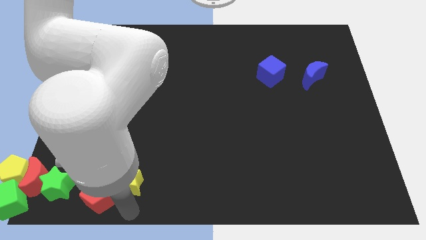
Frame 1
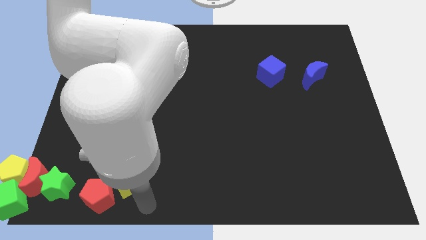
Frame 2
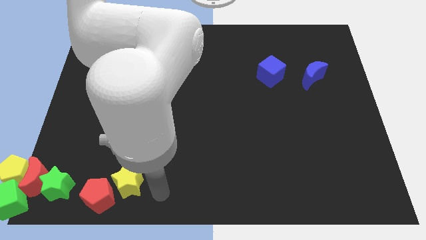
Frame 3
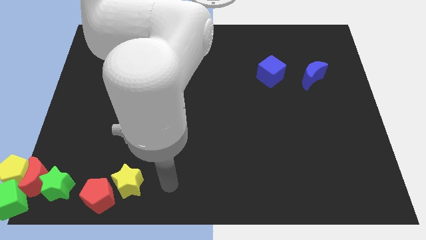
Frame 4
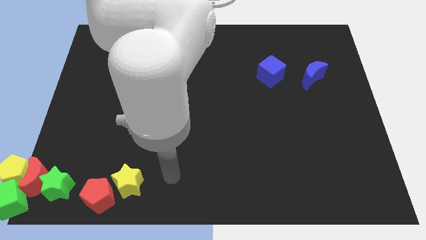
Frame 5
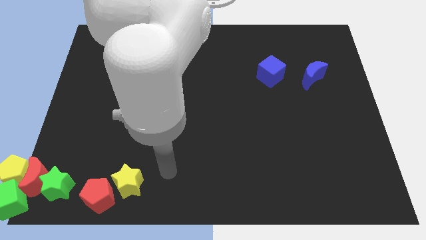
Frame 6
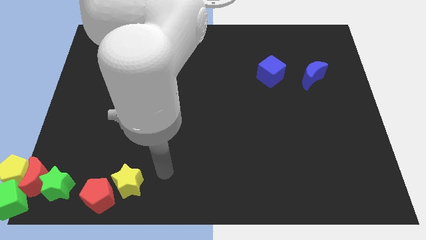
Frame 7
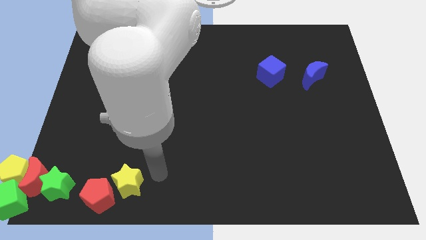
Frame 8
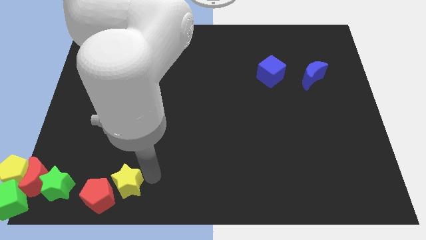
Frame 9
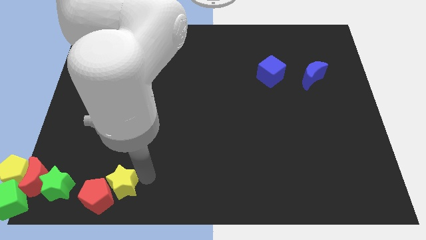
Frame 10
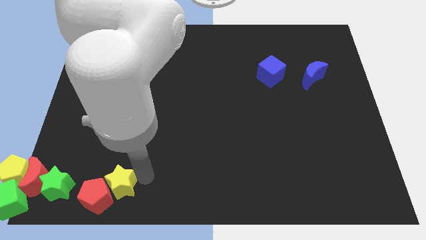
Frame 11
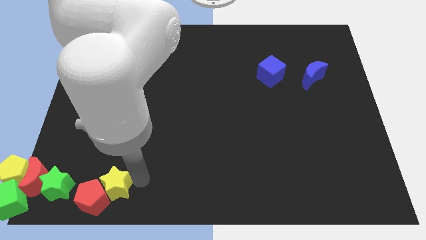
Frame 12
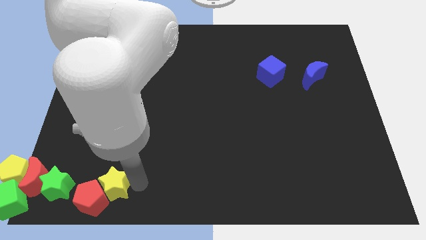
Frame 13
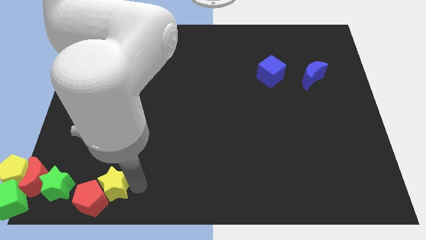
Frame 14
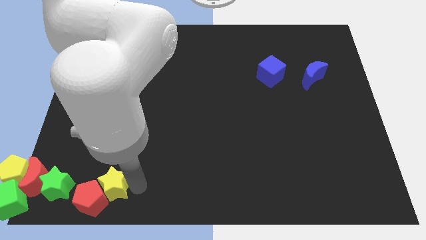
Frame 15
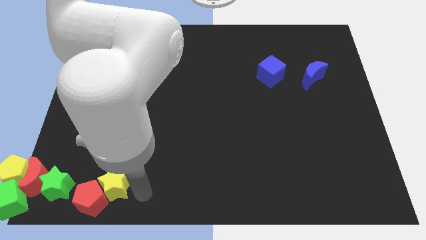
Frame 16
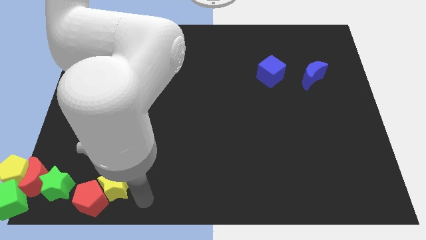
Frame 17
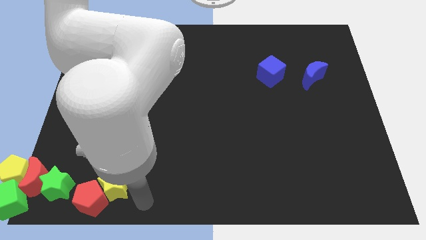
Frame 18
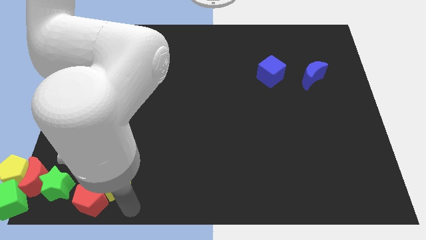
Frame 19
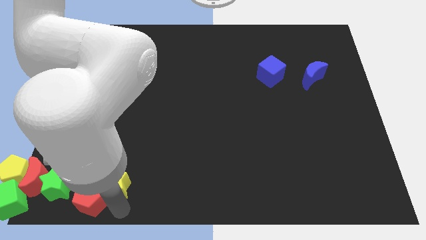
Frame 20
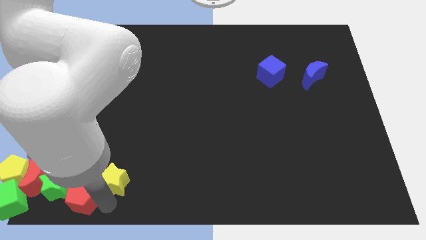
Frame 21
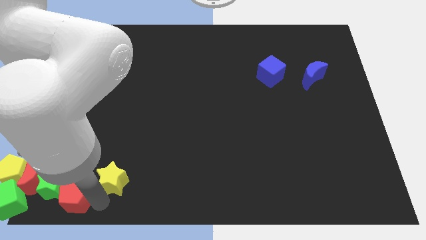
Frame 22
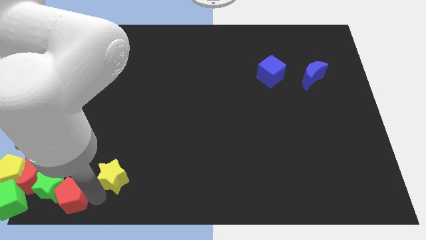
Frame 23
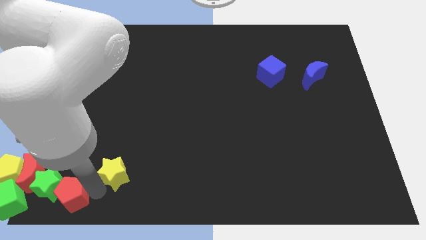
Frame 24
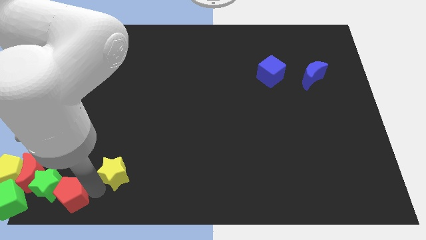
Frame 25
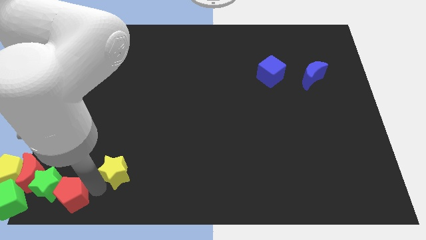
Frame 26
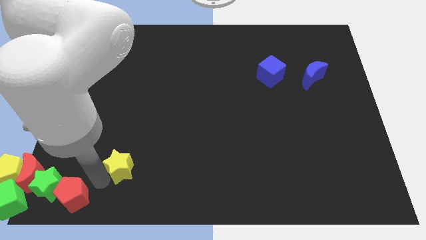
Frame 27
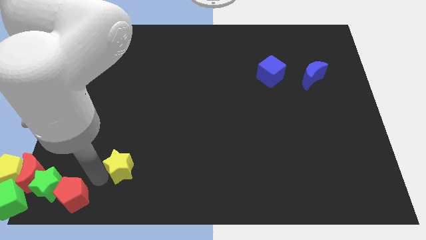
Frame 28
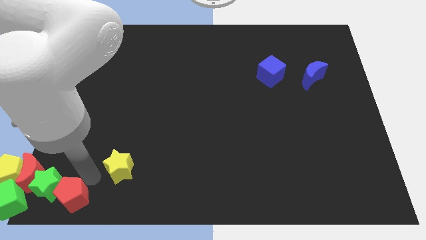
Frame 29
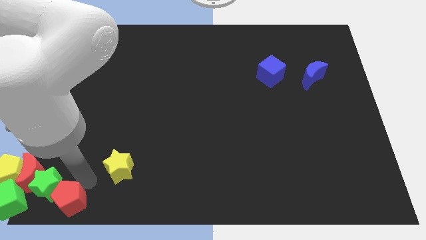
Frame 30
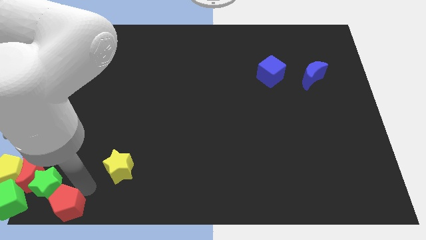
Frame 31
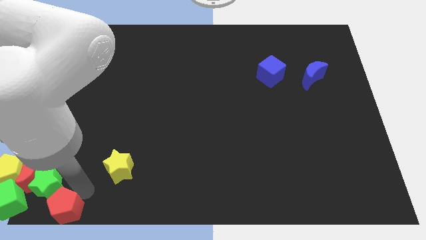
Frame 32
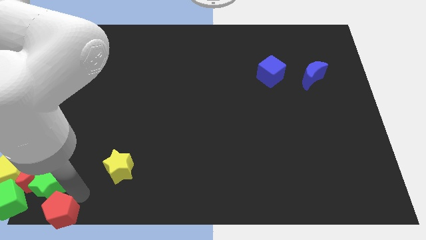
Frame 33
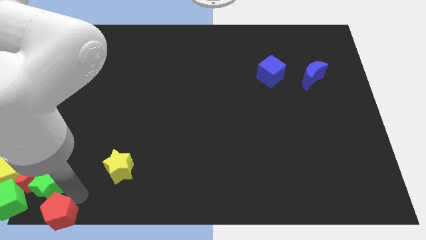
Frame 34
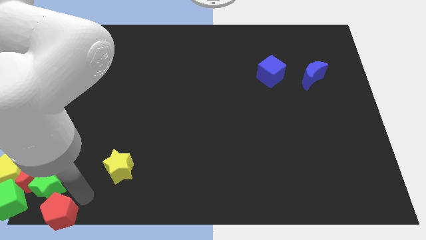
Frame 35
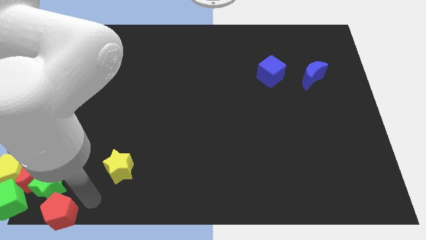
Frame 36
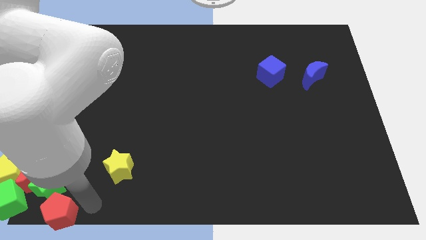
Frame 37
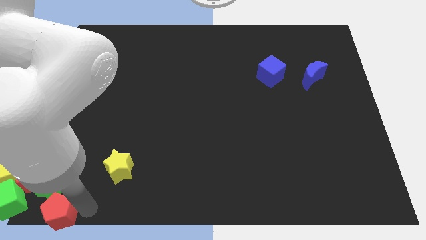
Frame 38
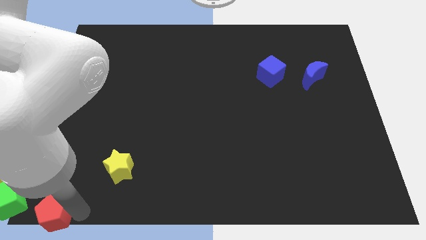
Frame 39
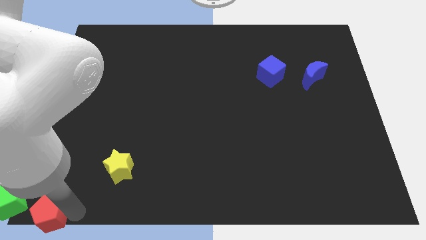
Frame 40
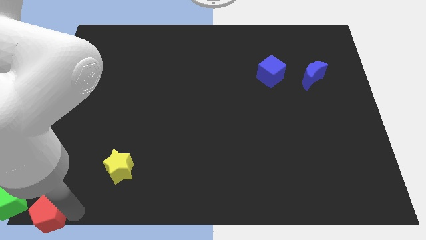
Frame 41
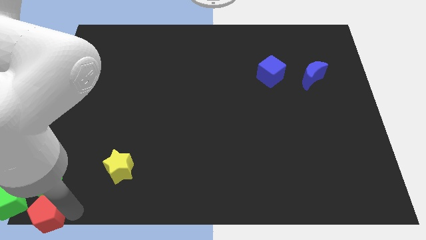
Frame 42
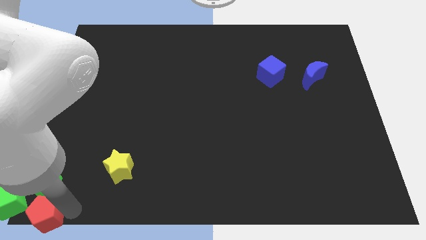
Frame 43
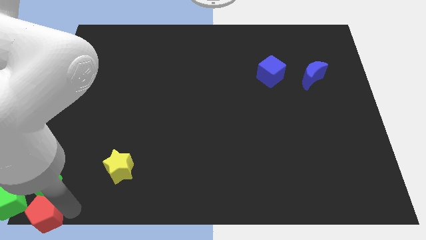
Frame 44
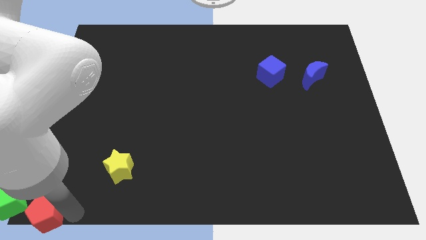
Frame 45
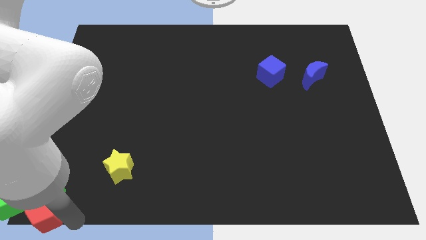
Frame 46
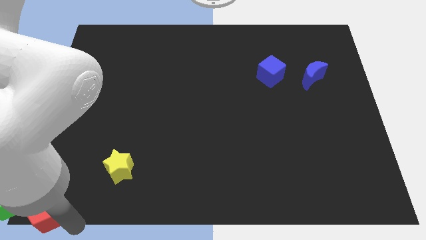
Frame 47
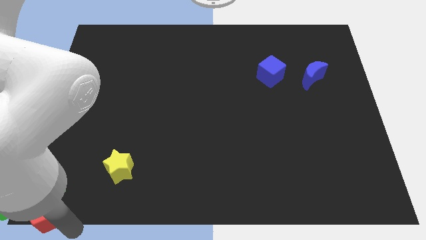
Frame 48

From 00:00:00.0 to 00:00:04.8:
push the red pentagon into the group of blocks

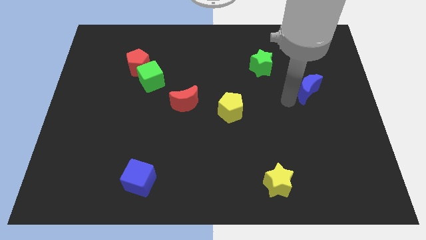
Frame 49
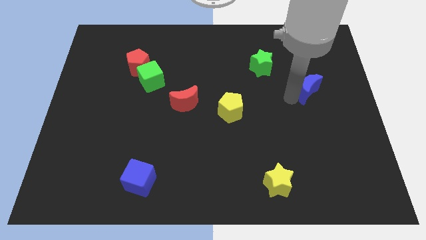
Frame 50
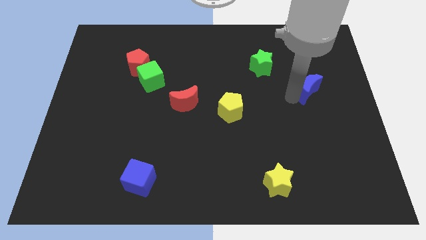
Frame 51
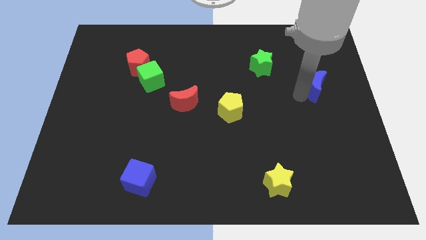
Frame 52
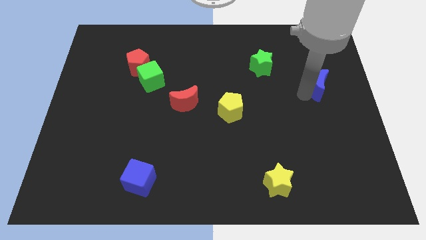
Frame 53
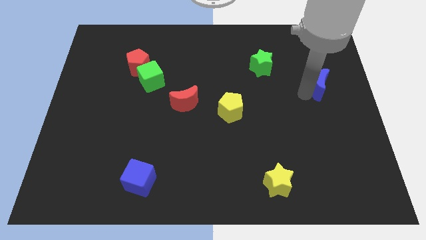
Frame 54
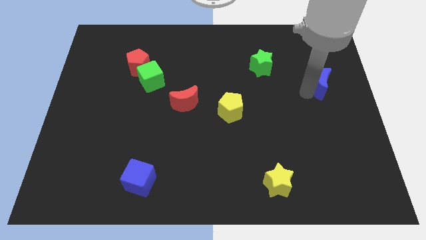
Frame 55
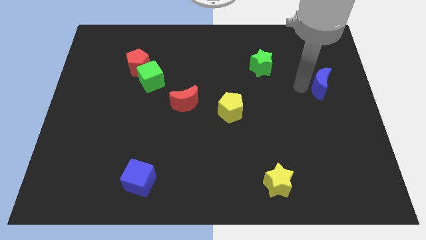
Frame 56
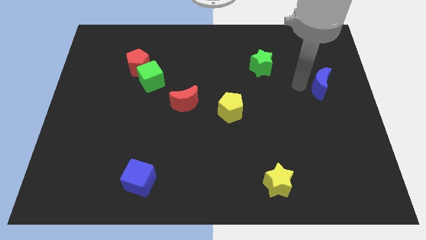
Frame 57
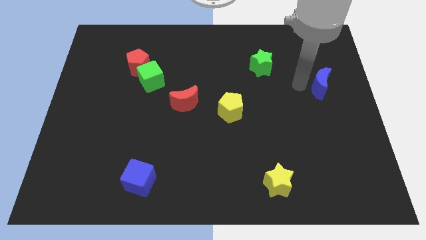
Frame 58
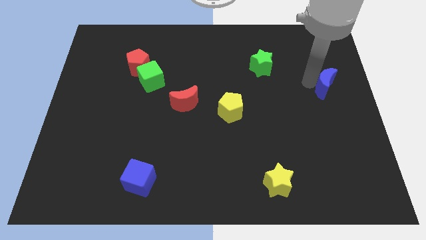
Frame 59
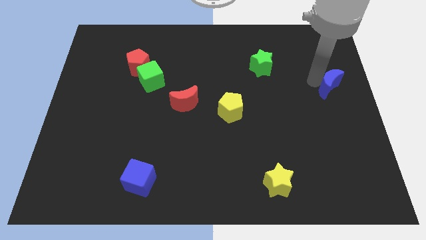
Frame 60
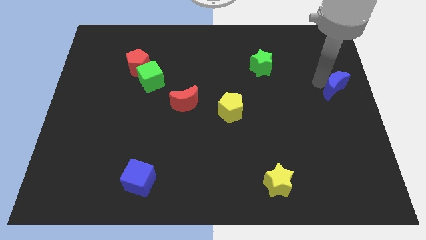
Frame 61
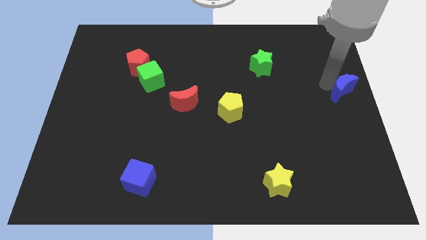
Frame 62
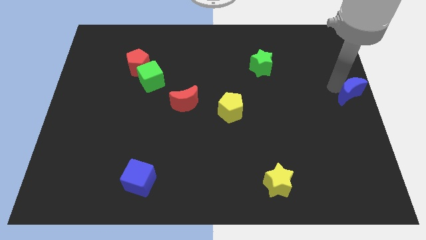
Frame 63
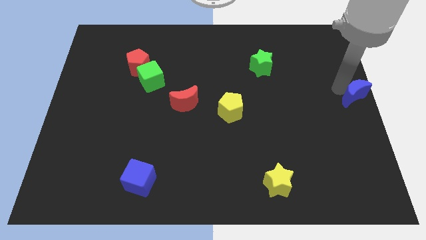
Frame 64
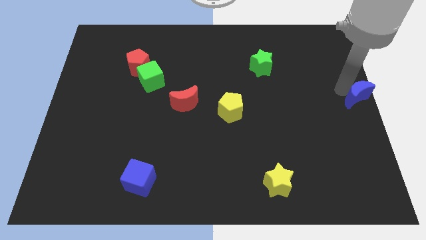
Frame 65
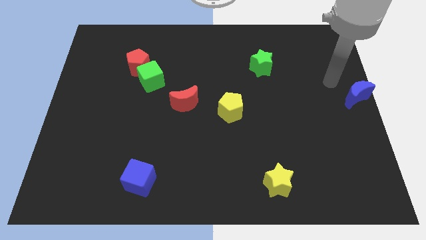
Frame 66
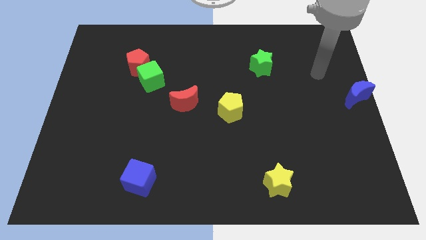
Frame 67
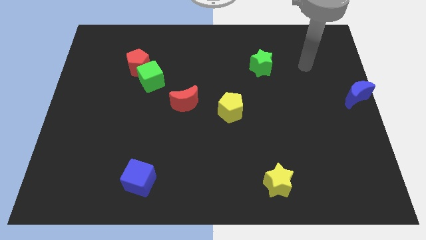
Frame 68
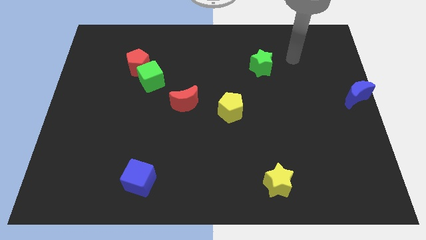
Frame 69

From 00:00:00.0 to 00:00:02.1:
move the blue crescent parallel to yellow pentagon

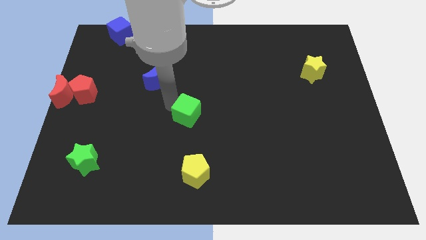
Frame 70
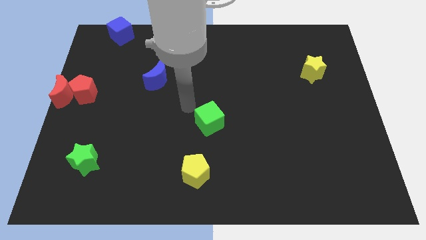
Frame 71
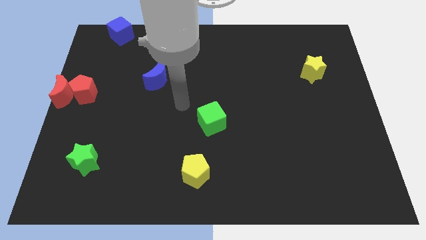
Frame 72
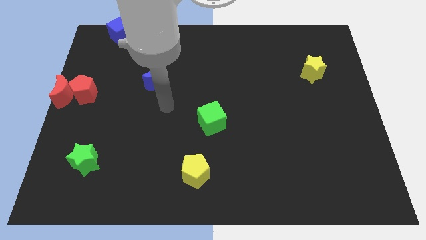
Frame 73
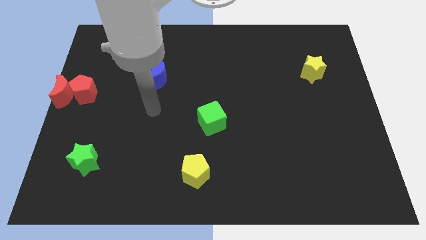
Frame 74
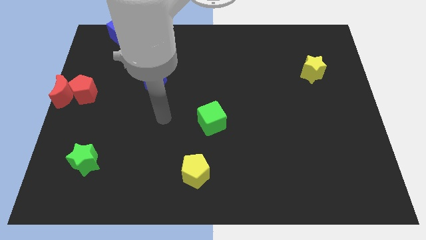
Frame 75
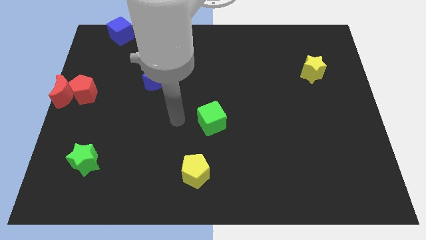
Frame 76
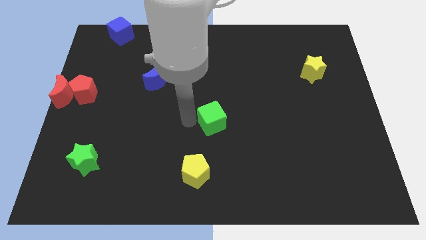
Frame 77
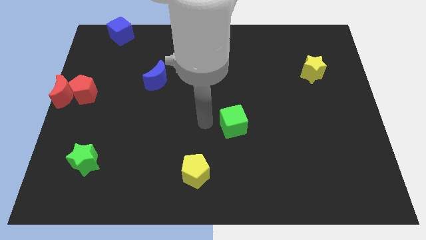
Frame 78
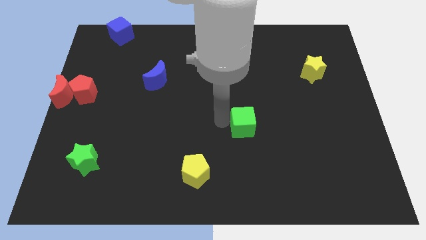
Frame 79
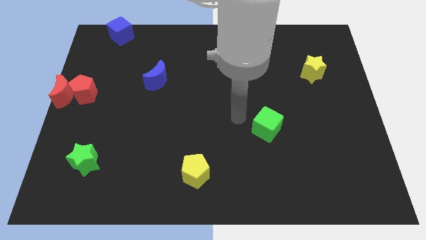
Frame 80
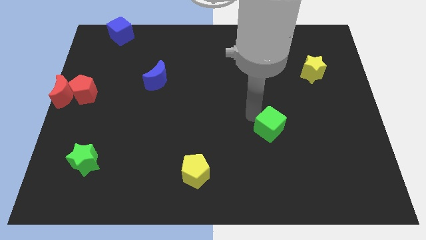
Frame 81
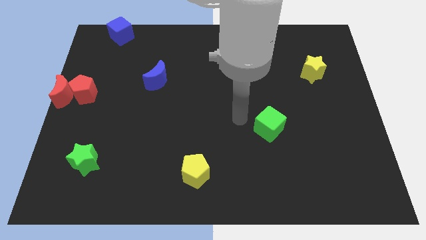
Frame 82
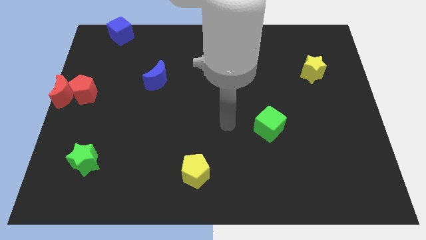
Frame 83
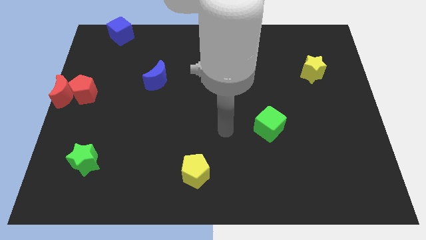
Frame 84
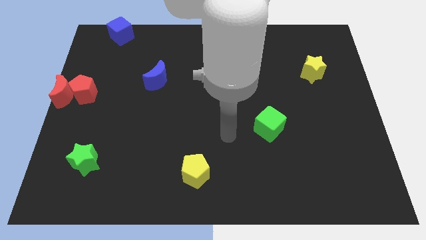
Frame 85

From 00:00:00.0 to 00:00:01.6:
place the green cube in between the yellow star and yellow pentagon

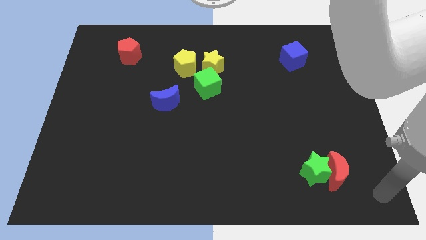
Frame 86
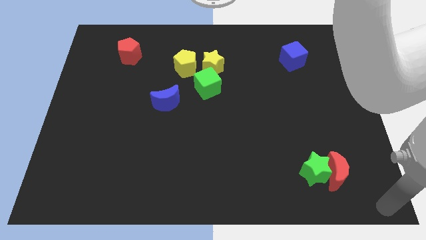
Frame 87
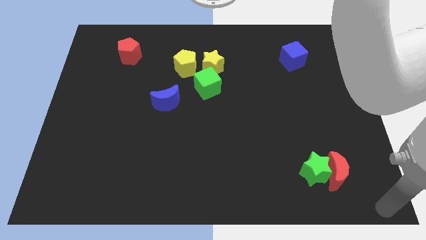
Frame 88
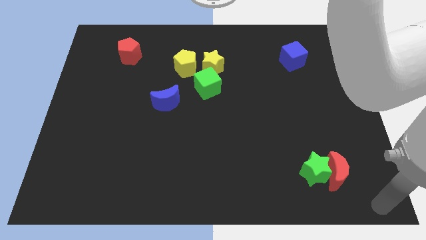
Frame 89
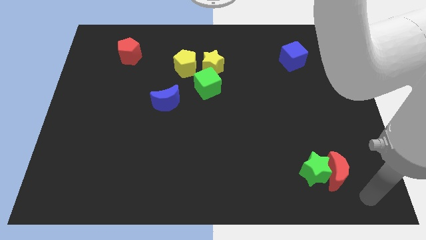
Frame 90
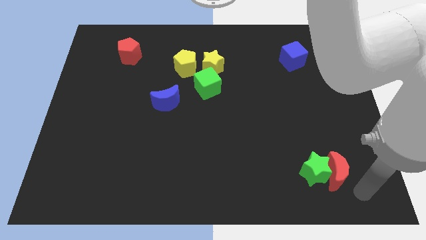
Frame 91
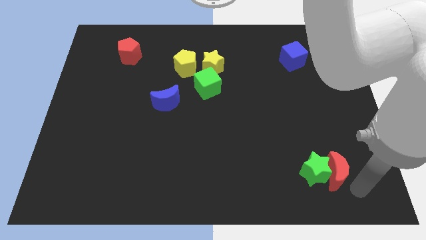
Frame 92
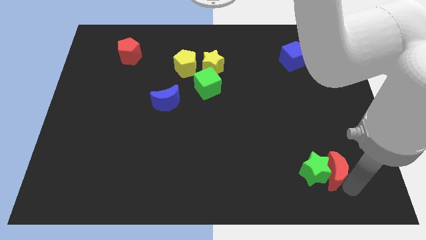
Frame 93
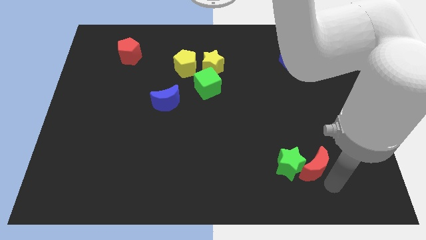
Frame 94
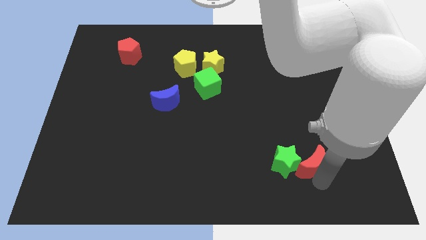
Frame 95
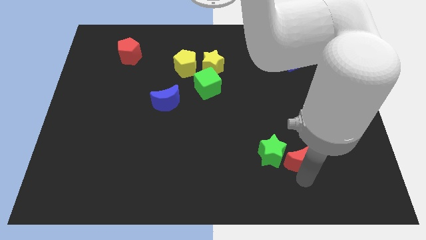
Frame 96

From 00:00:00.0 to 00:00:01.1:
push red moon in to green star
